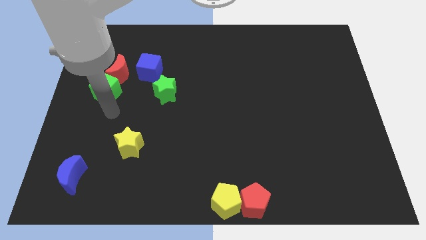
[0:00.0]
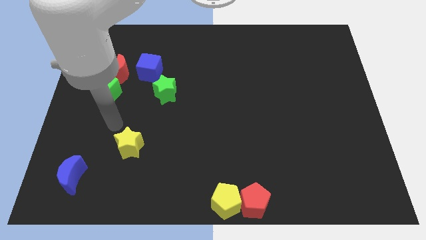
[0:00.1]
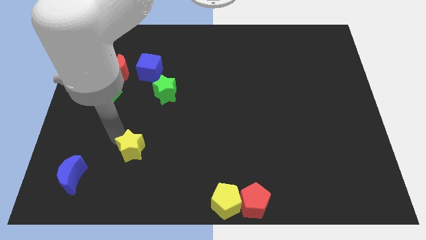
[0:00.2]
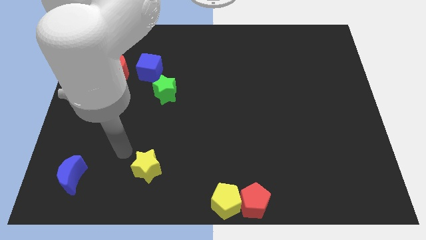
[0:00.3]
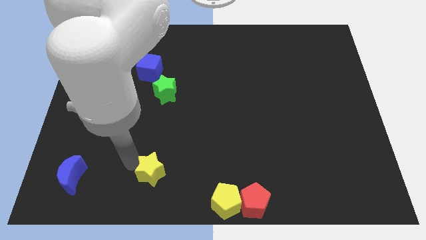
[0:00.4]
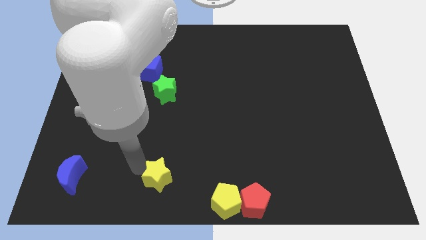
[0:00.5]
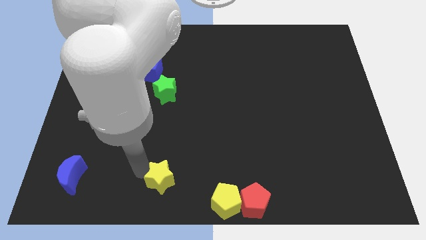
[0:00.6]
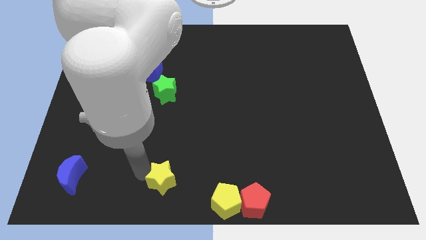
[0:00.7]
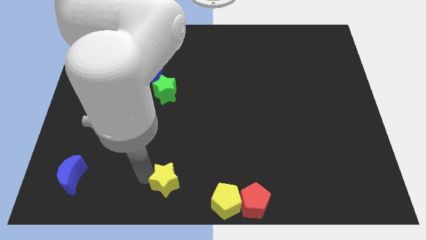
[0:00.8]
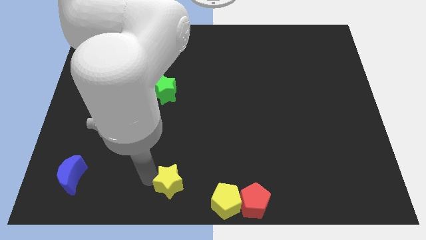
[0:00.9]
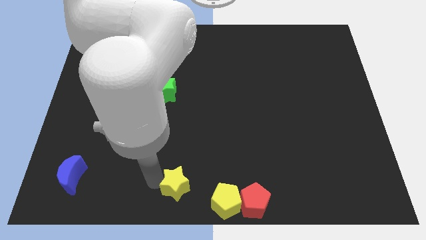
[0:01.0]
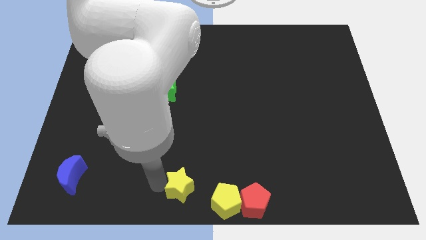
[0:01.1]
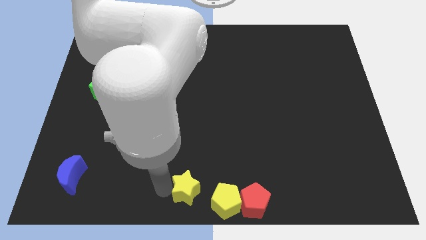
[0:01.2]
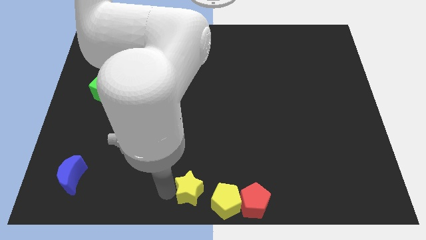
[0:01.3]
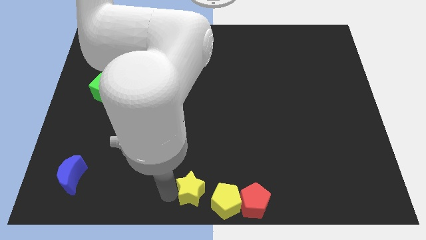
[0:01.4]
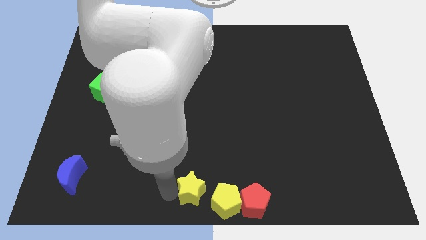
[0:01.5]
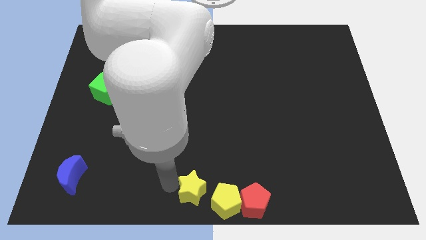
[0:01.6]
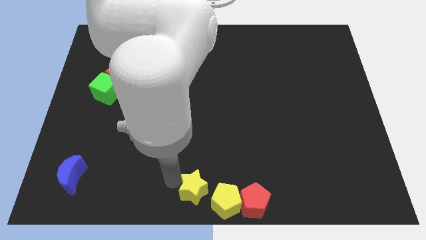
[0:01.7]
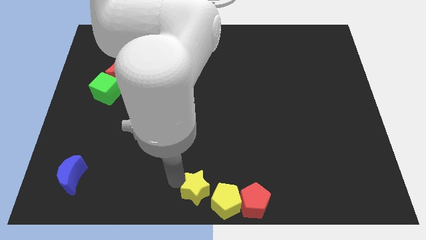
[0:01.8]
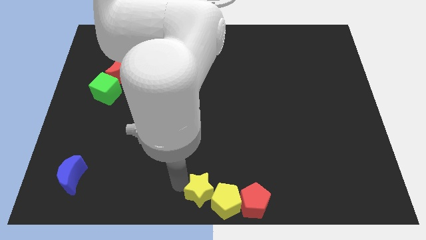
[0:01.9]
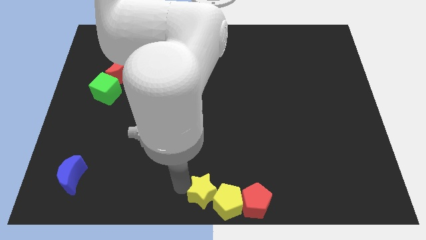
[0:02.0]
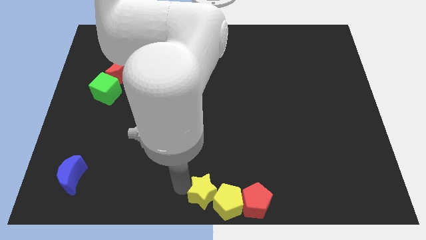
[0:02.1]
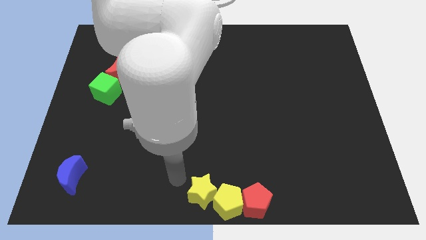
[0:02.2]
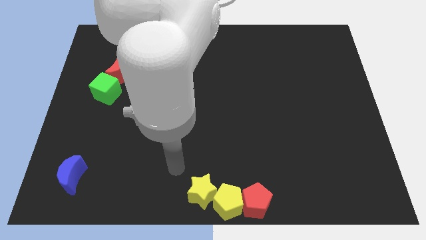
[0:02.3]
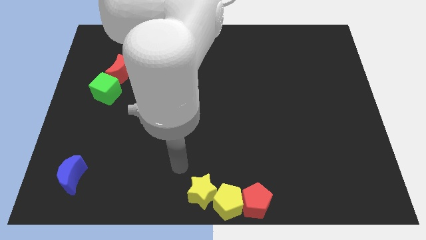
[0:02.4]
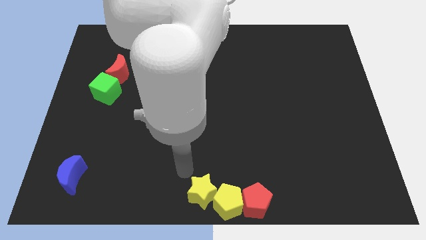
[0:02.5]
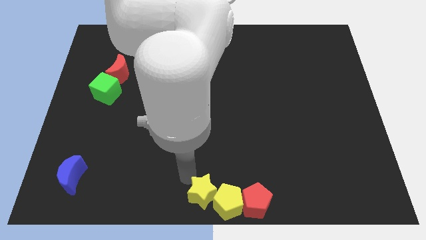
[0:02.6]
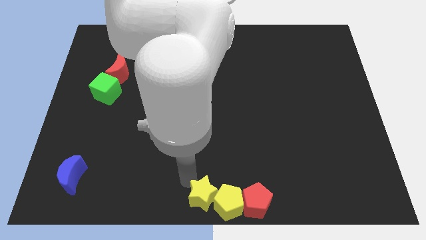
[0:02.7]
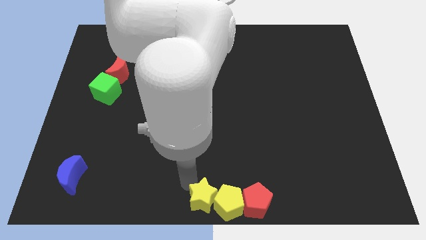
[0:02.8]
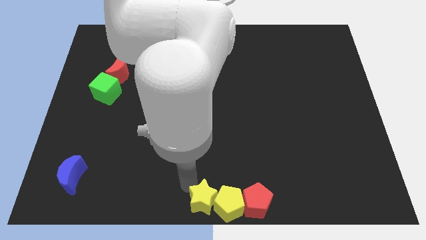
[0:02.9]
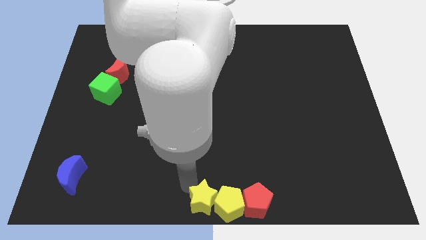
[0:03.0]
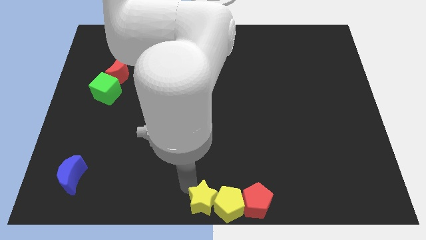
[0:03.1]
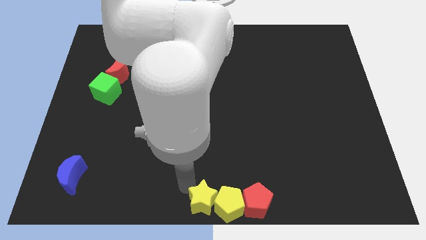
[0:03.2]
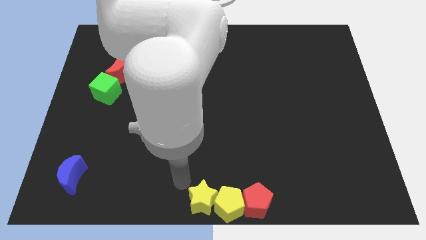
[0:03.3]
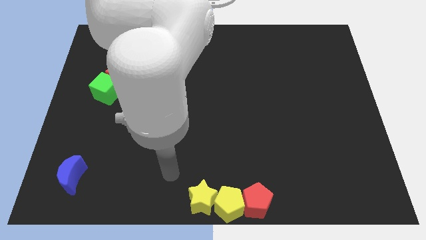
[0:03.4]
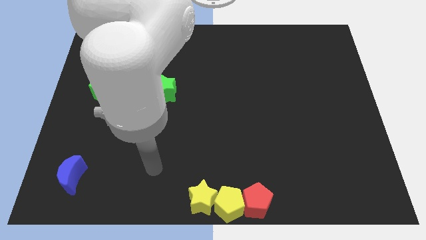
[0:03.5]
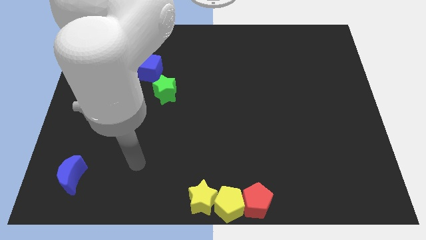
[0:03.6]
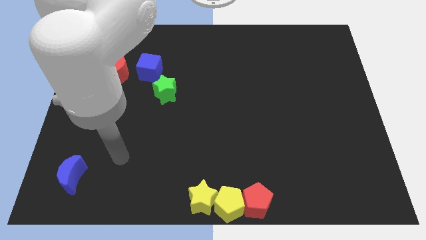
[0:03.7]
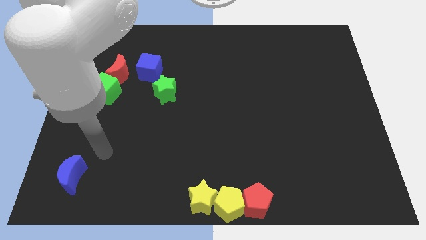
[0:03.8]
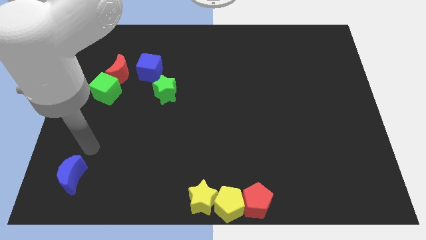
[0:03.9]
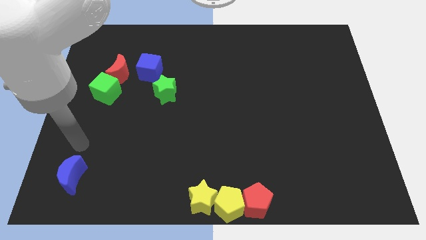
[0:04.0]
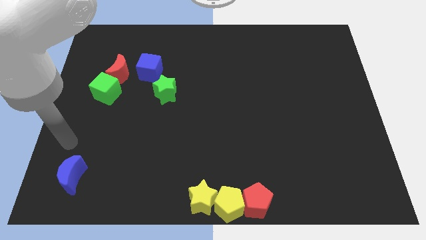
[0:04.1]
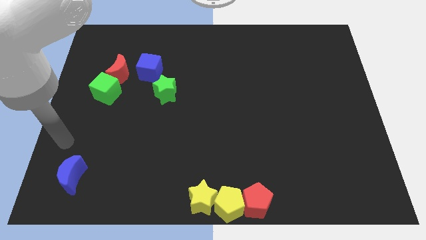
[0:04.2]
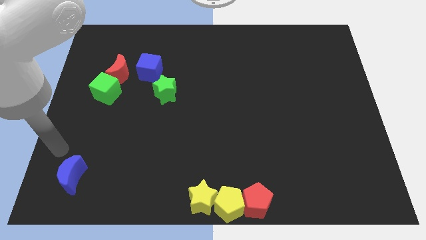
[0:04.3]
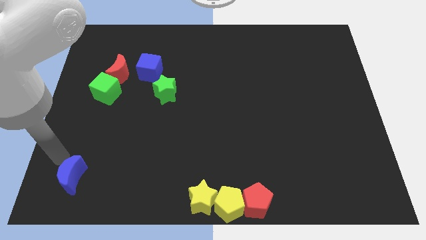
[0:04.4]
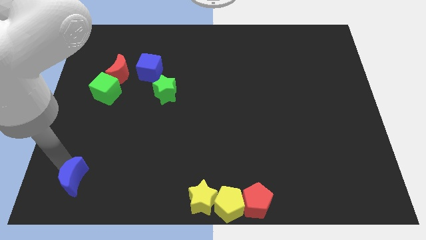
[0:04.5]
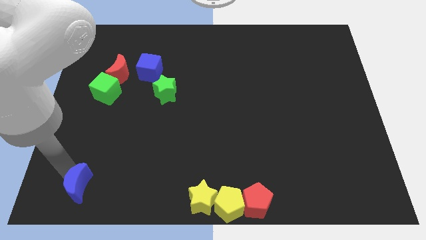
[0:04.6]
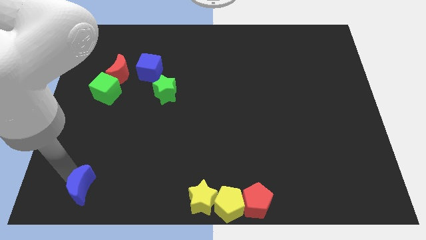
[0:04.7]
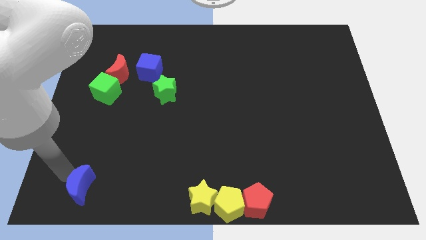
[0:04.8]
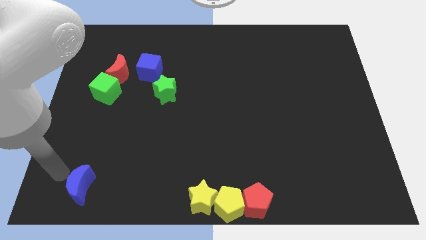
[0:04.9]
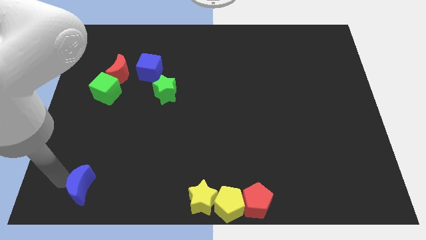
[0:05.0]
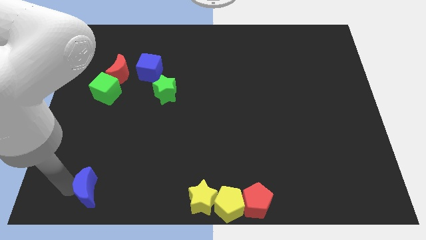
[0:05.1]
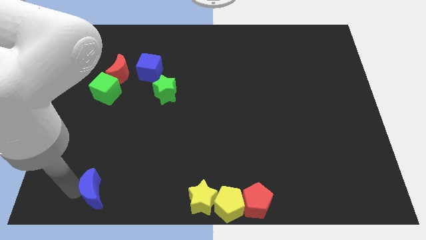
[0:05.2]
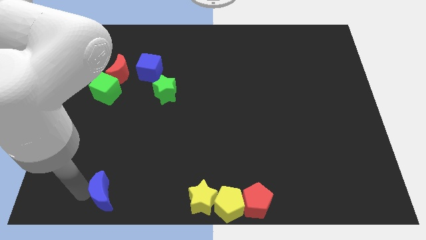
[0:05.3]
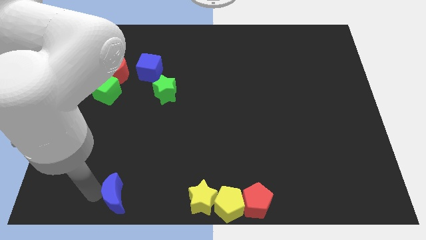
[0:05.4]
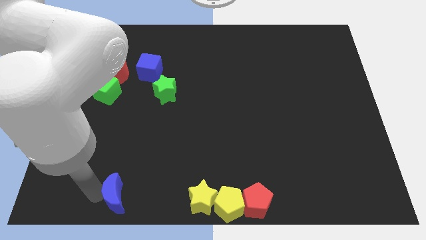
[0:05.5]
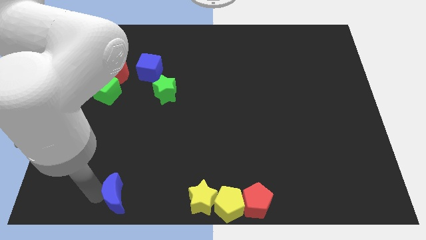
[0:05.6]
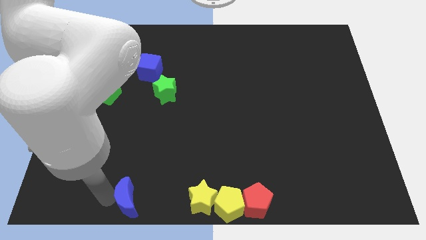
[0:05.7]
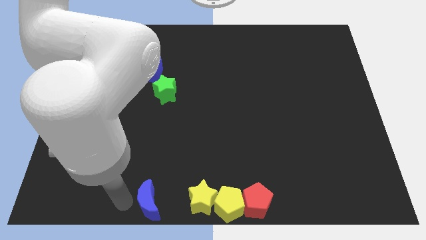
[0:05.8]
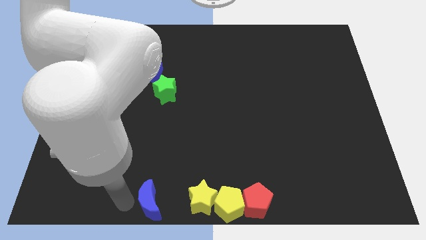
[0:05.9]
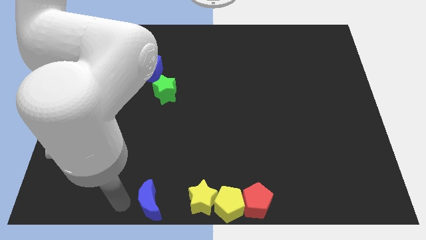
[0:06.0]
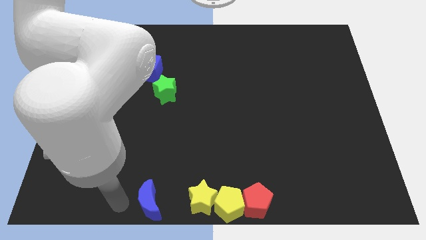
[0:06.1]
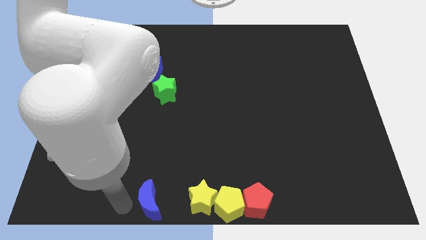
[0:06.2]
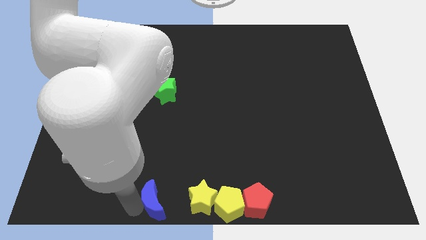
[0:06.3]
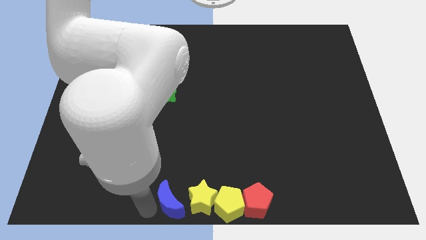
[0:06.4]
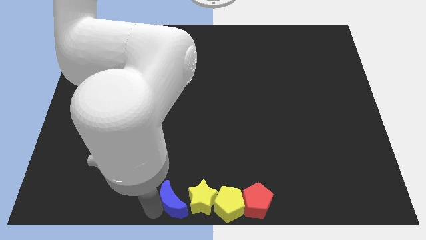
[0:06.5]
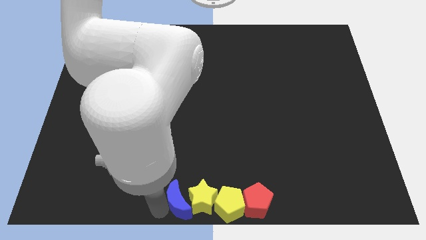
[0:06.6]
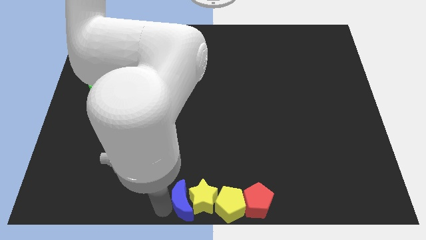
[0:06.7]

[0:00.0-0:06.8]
make a diagonal line with the yellow star blue crescent yellow pentagon and red pentagon at the bottom side of the board

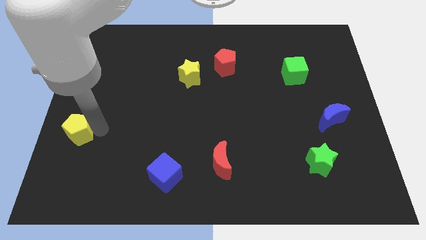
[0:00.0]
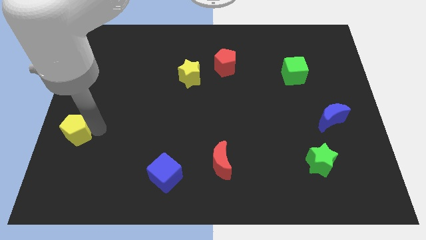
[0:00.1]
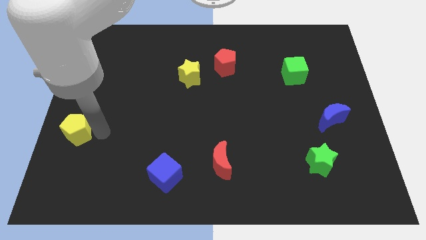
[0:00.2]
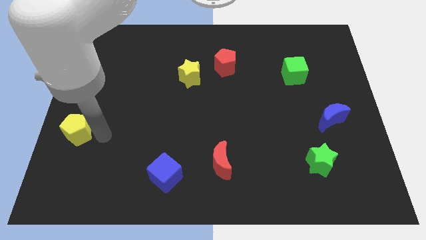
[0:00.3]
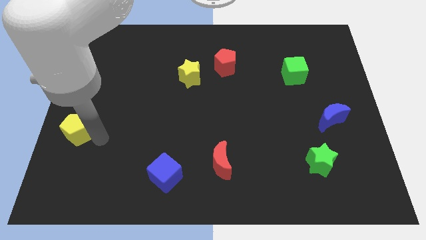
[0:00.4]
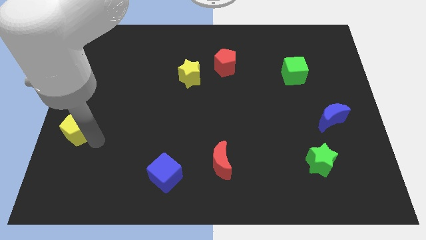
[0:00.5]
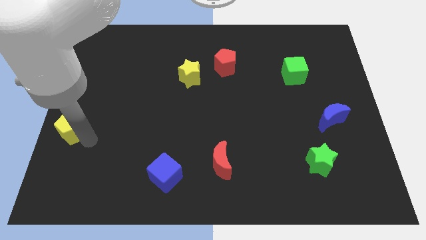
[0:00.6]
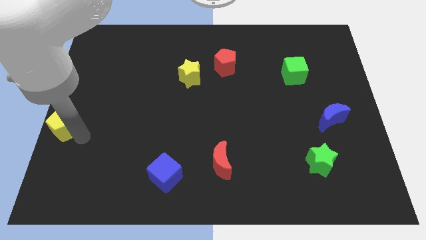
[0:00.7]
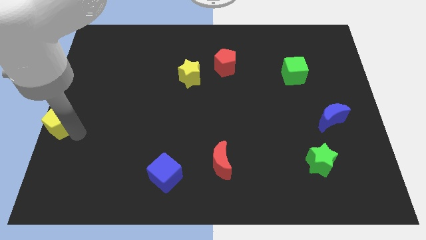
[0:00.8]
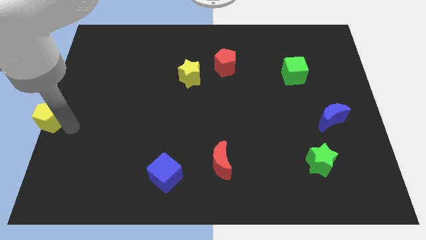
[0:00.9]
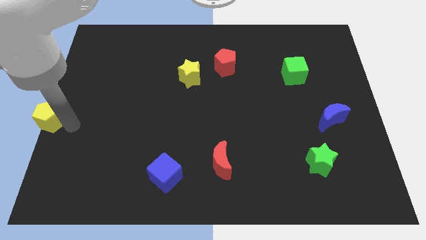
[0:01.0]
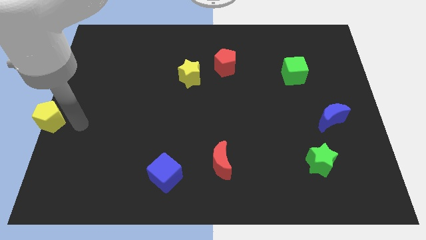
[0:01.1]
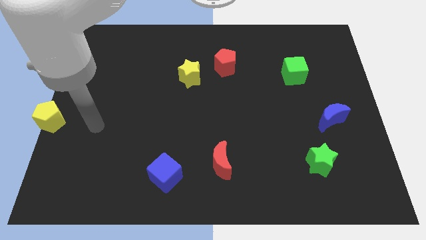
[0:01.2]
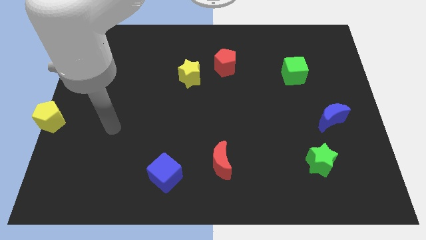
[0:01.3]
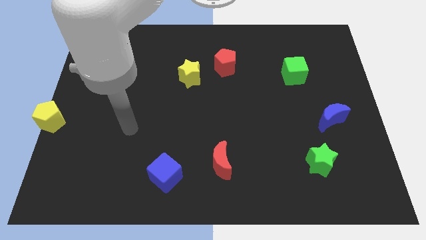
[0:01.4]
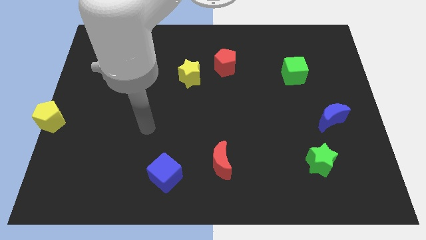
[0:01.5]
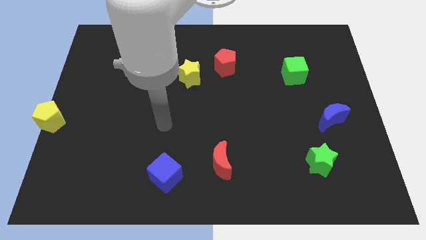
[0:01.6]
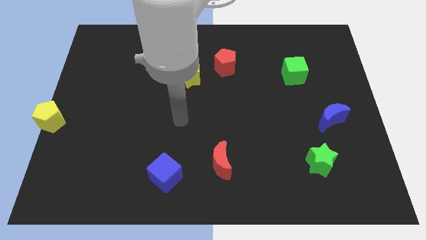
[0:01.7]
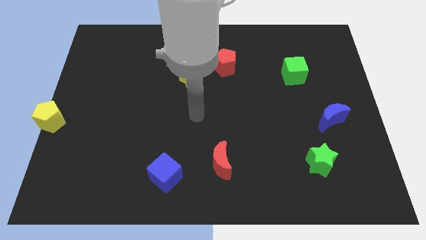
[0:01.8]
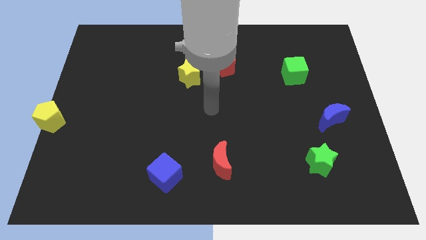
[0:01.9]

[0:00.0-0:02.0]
place your arm in the center of the board
